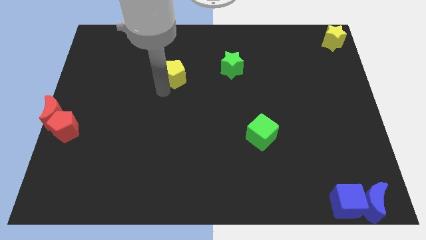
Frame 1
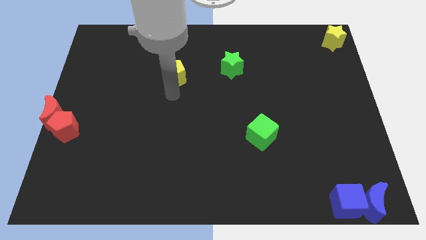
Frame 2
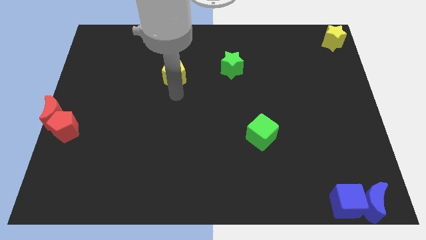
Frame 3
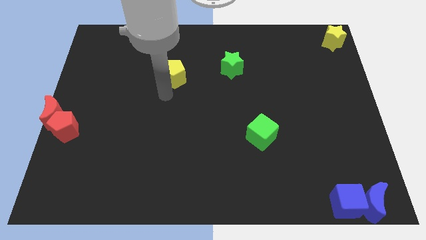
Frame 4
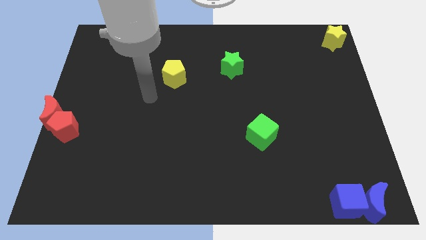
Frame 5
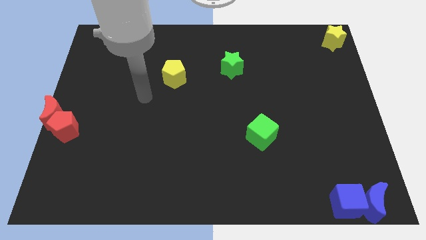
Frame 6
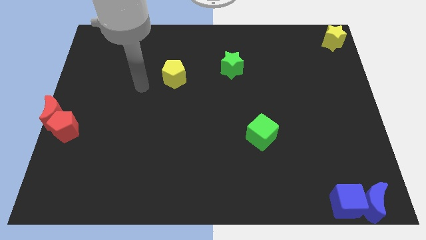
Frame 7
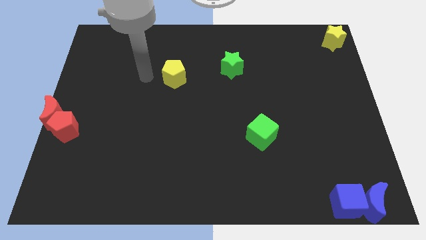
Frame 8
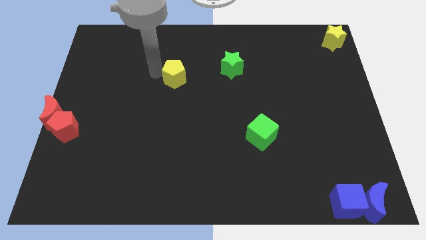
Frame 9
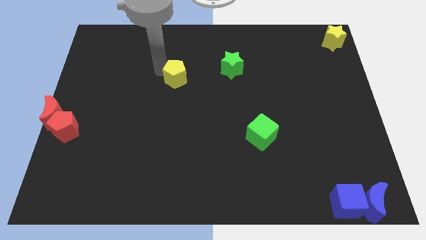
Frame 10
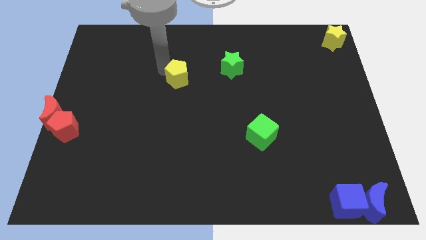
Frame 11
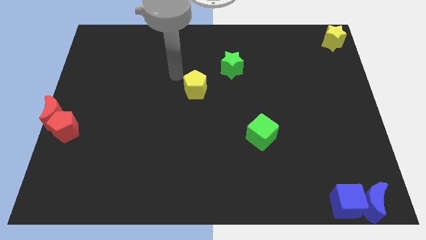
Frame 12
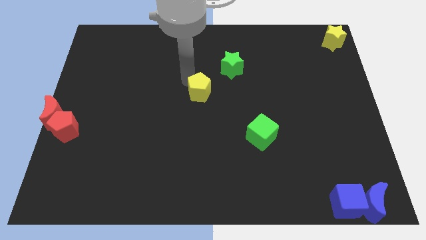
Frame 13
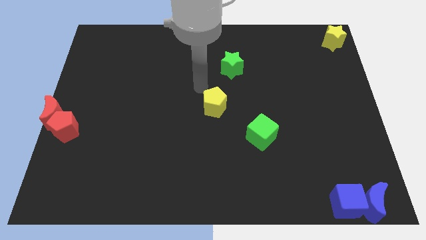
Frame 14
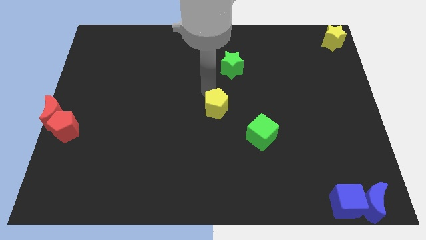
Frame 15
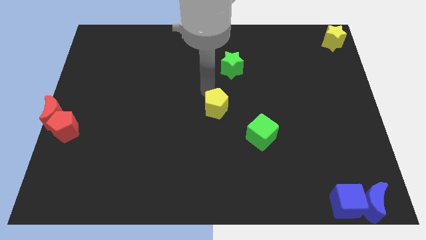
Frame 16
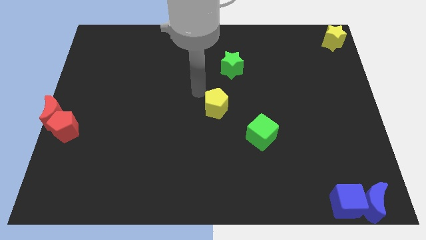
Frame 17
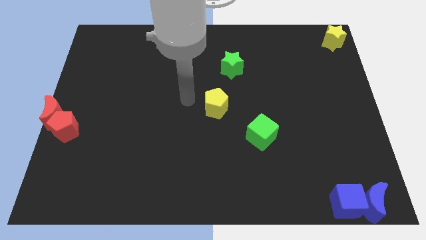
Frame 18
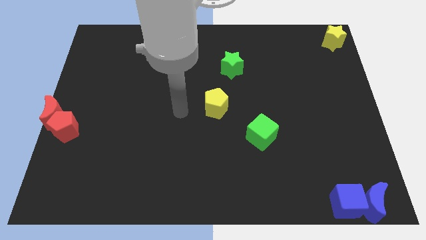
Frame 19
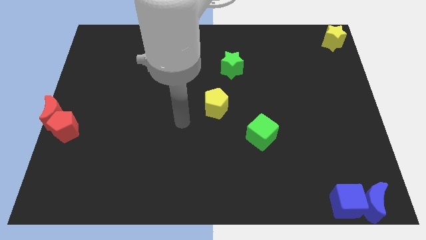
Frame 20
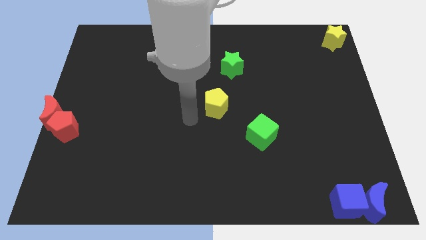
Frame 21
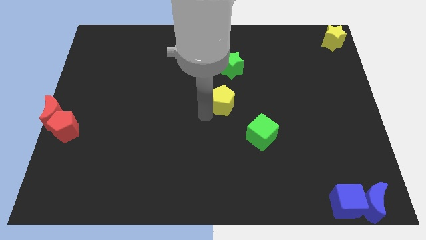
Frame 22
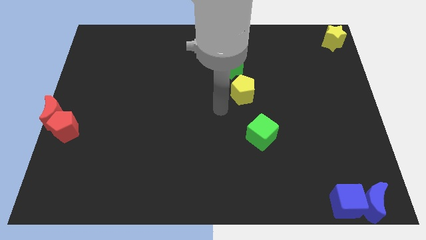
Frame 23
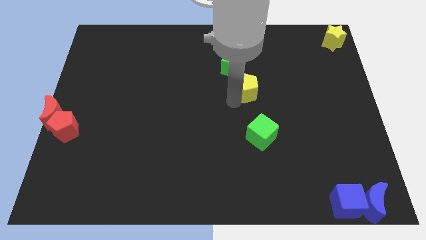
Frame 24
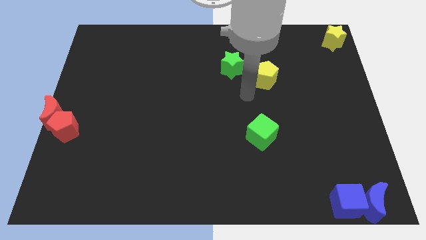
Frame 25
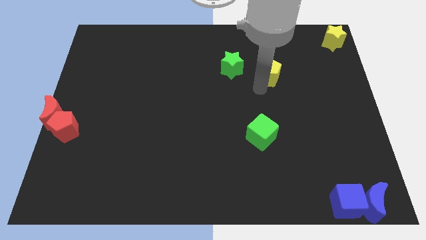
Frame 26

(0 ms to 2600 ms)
move the yellow pentagon towards the yellow star

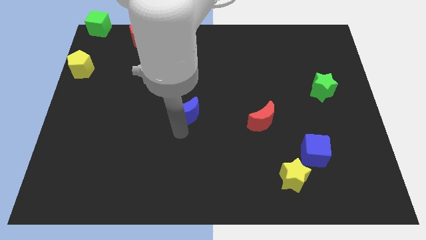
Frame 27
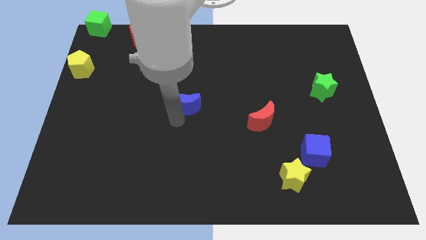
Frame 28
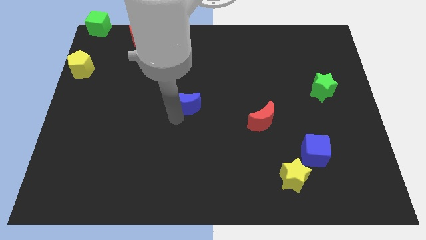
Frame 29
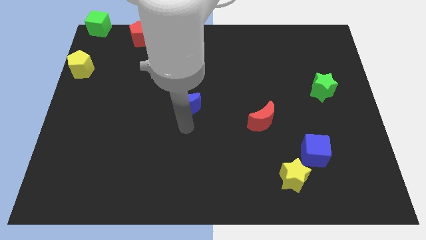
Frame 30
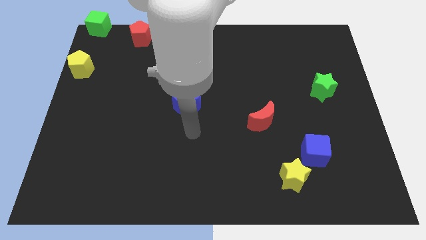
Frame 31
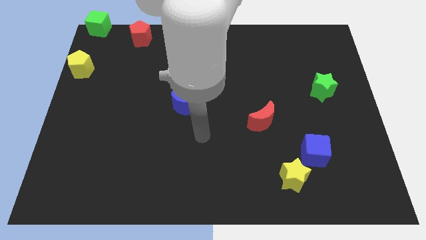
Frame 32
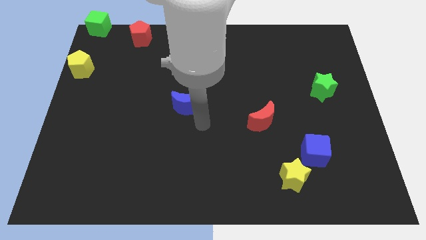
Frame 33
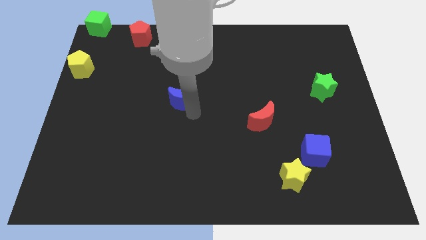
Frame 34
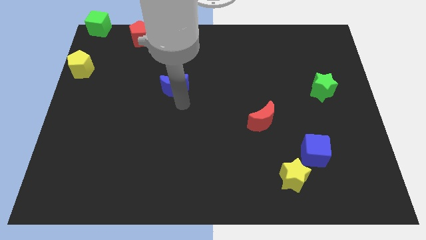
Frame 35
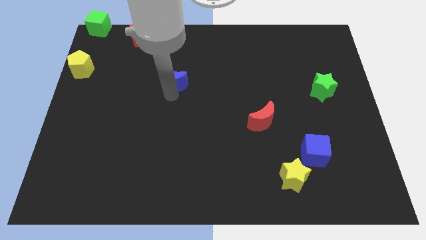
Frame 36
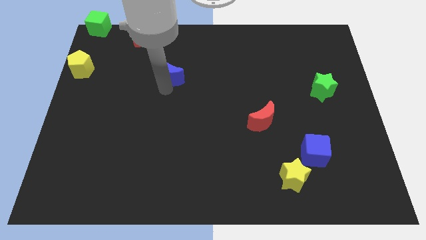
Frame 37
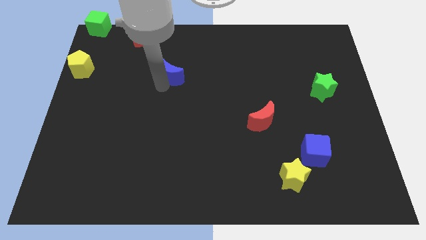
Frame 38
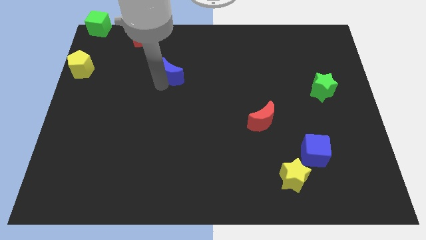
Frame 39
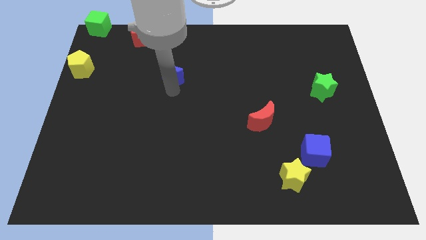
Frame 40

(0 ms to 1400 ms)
place the blue moon right to the yellow pentagon

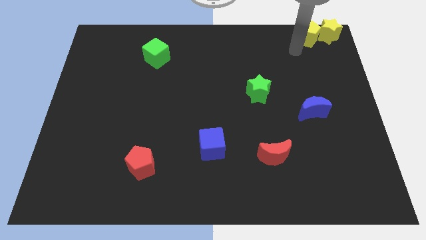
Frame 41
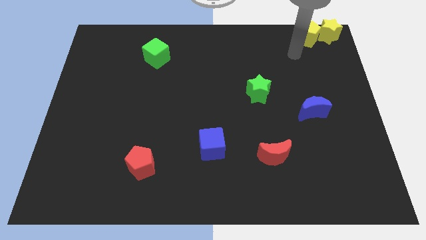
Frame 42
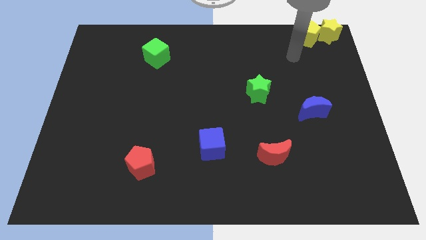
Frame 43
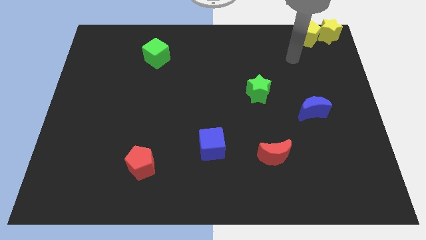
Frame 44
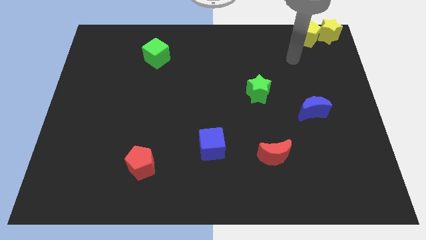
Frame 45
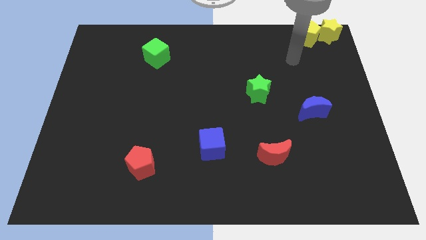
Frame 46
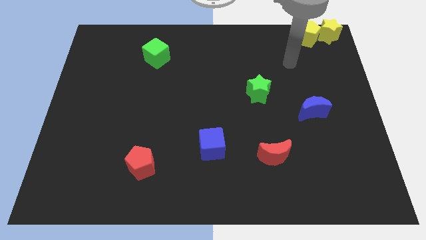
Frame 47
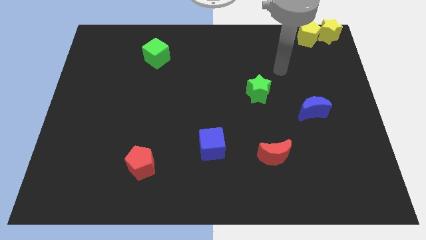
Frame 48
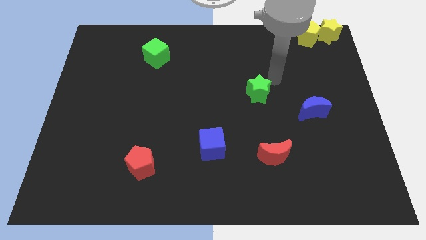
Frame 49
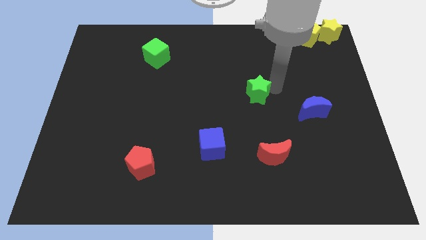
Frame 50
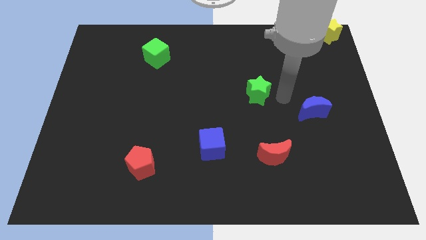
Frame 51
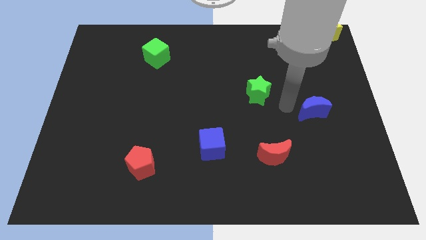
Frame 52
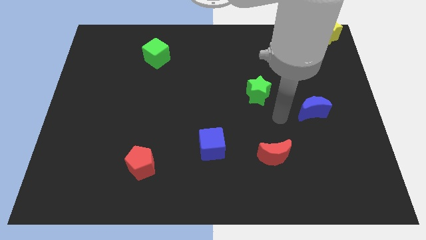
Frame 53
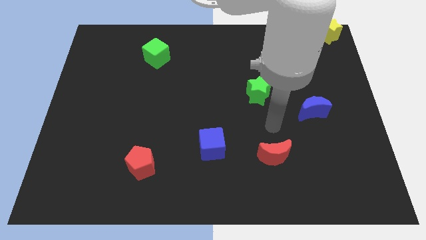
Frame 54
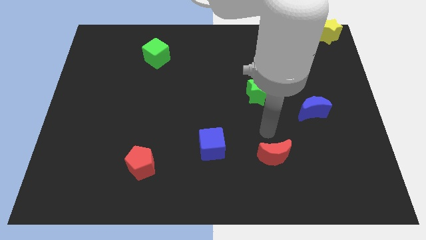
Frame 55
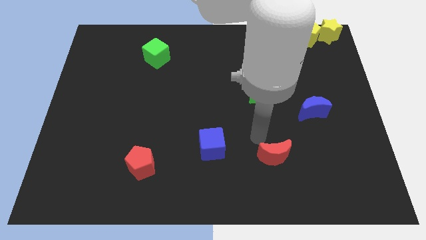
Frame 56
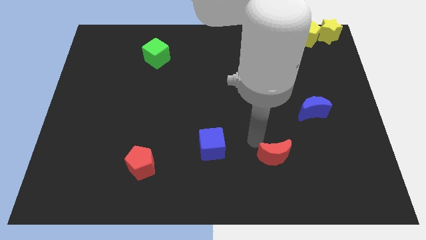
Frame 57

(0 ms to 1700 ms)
move the arm towards the red crescent

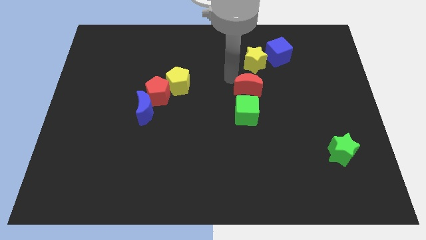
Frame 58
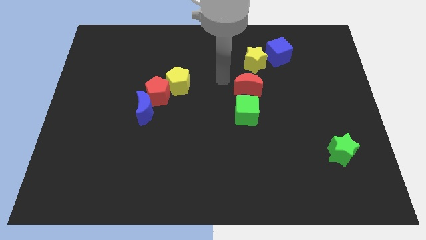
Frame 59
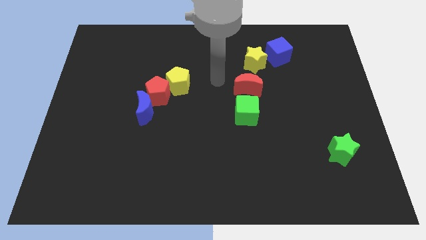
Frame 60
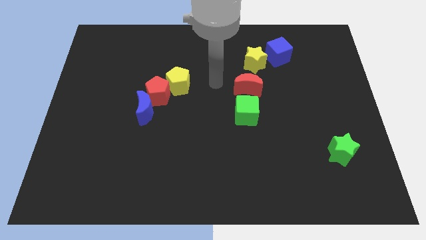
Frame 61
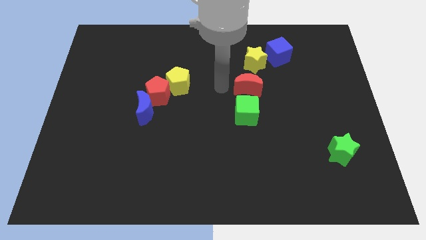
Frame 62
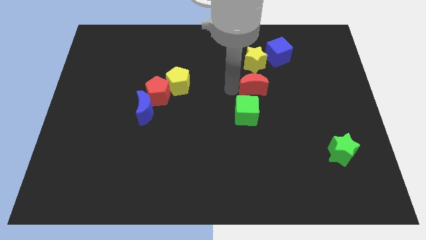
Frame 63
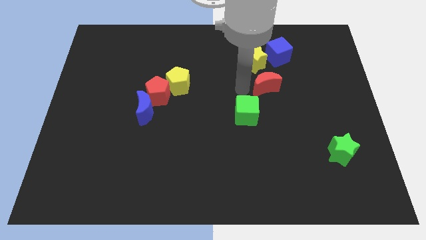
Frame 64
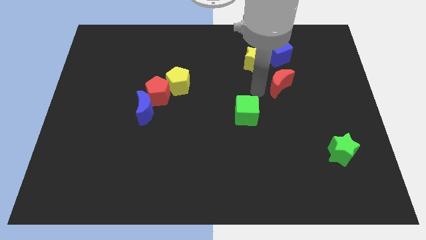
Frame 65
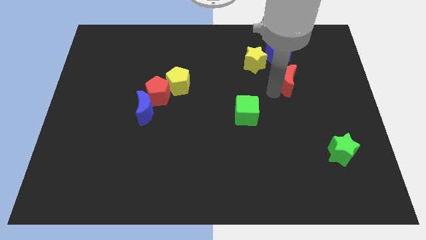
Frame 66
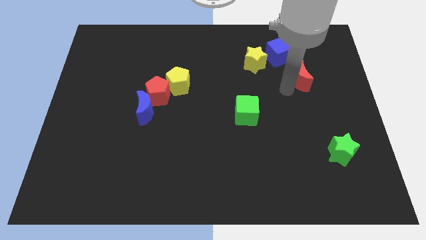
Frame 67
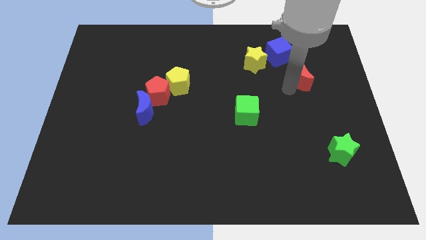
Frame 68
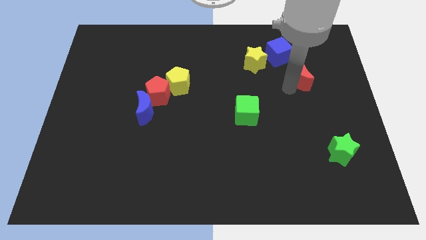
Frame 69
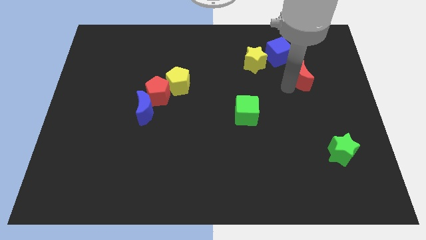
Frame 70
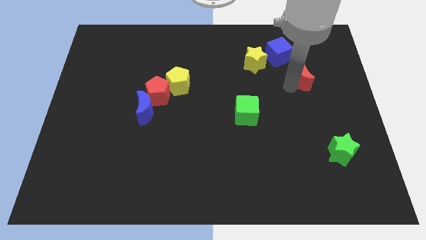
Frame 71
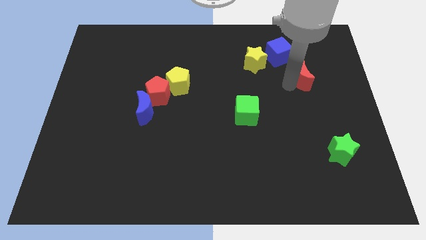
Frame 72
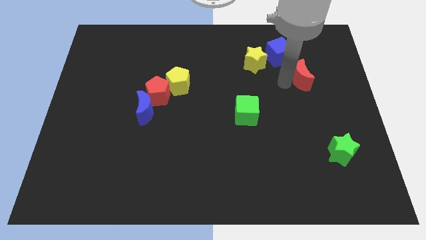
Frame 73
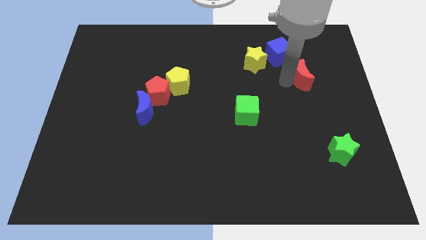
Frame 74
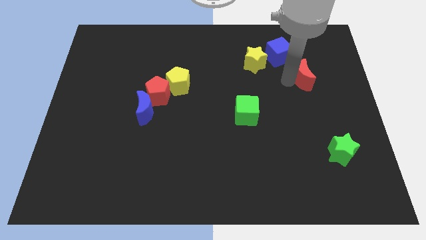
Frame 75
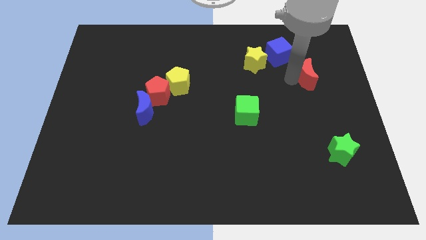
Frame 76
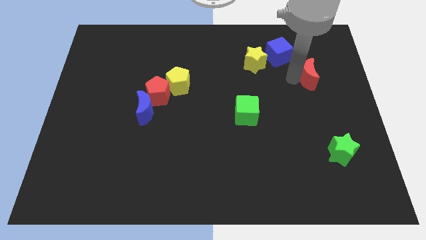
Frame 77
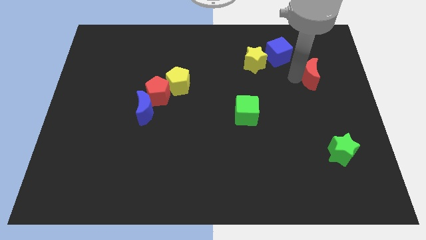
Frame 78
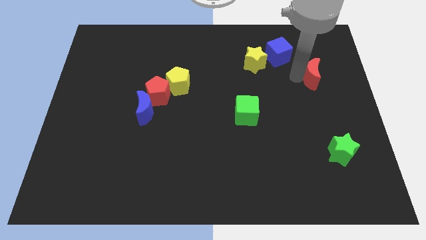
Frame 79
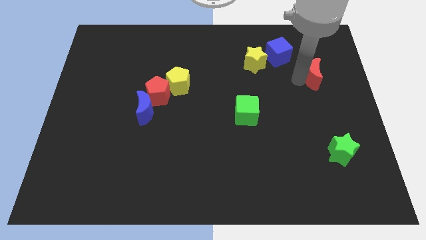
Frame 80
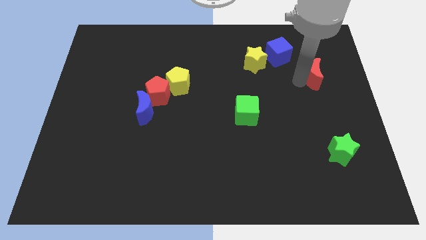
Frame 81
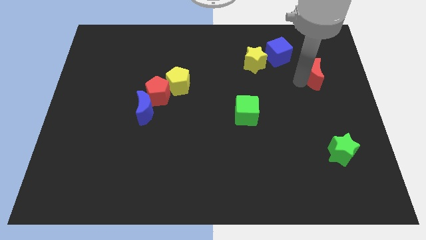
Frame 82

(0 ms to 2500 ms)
move the red crescent to the bottom right of the blue cube

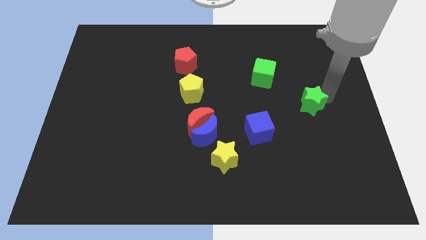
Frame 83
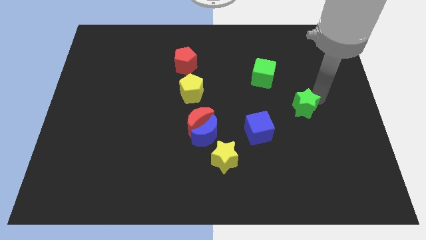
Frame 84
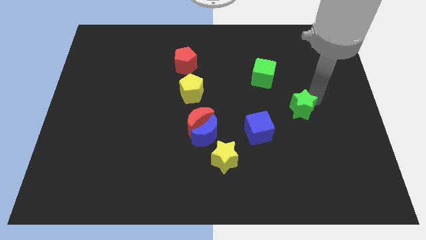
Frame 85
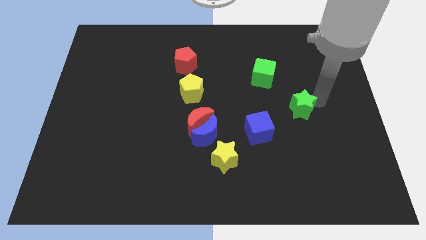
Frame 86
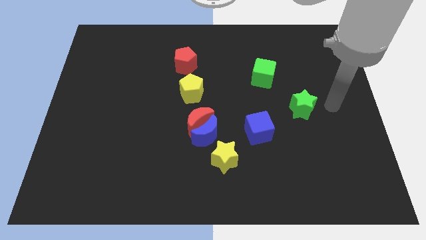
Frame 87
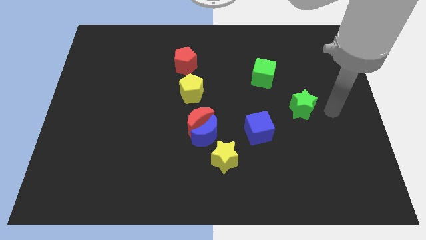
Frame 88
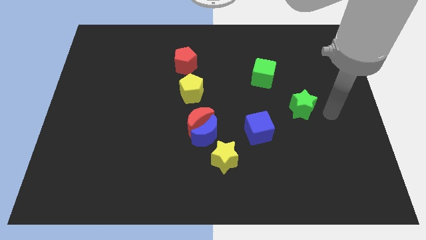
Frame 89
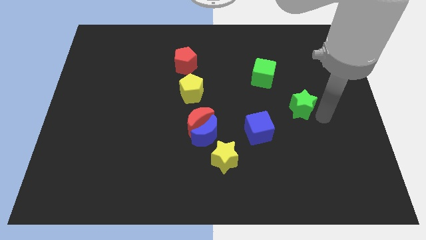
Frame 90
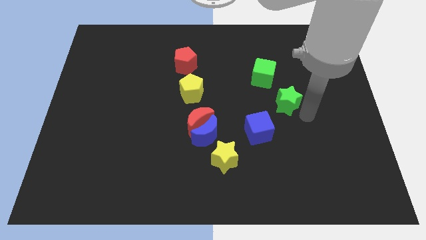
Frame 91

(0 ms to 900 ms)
place the green star below the green cube
